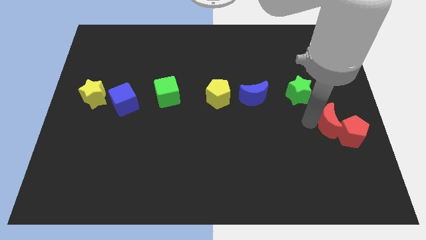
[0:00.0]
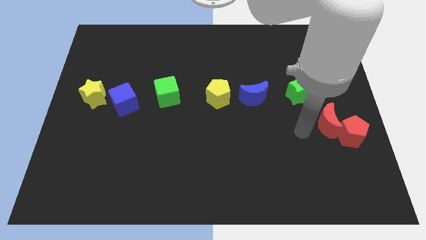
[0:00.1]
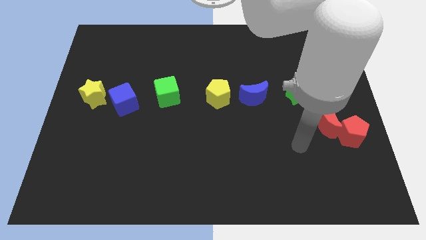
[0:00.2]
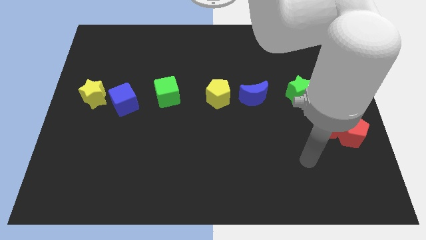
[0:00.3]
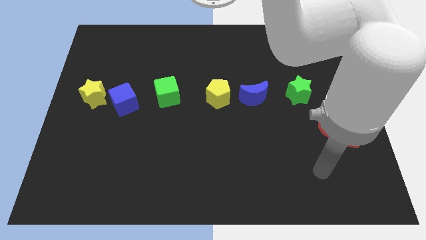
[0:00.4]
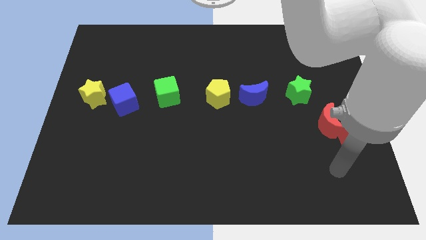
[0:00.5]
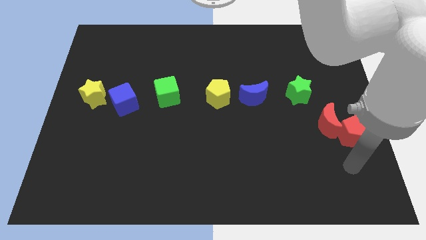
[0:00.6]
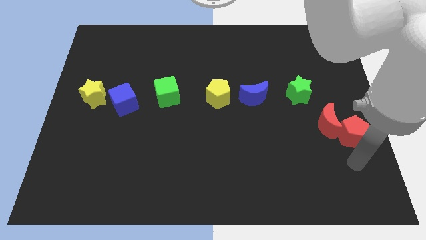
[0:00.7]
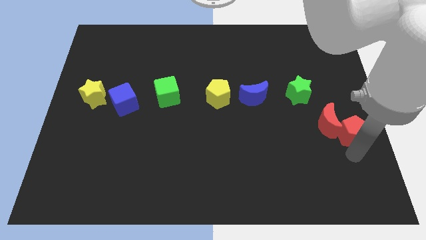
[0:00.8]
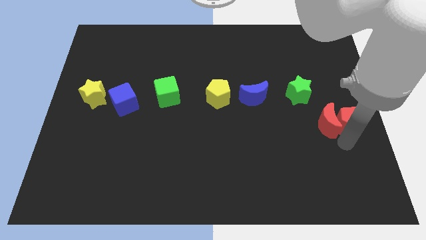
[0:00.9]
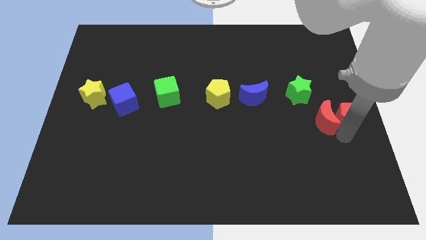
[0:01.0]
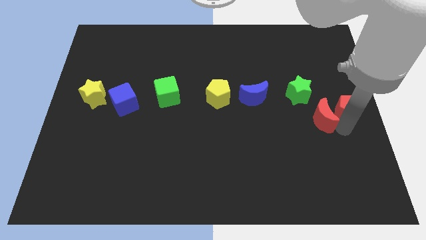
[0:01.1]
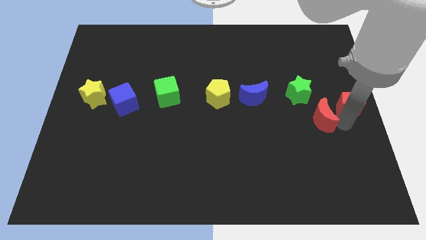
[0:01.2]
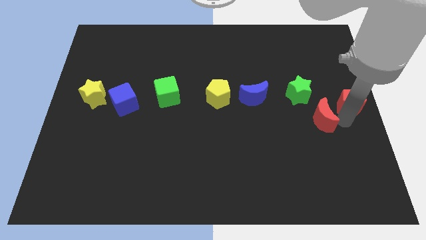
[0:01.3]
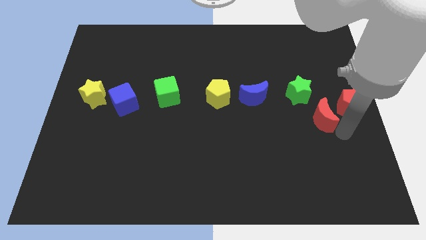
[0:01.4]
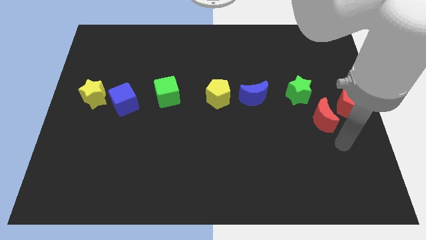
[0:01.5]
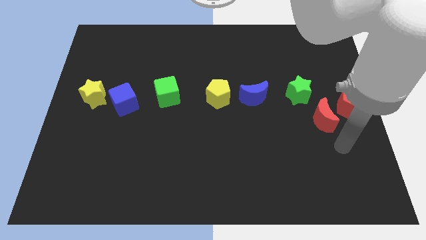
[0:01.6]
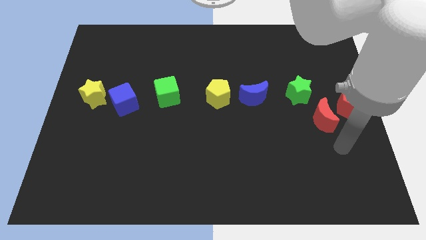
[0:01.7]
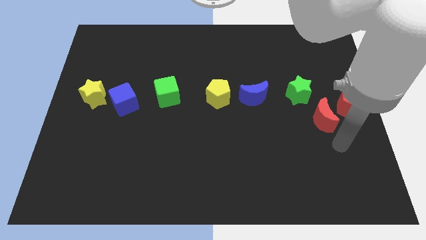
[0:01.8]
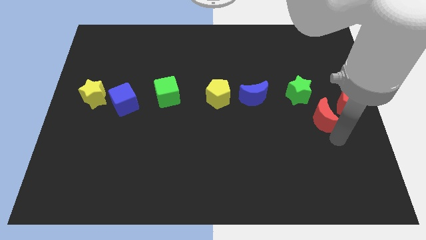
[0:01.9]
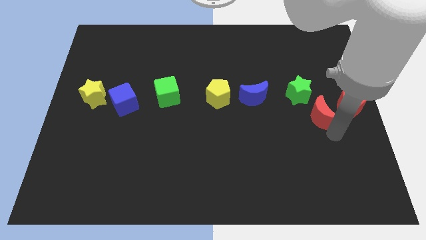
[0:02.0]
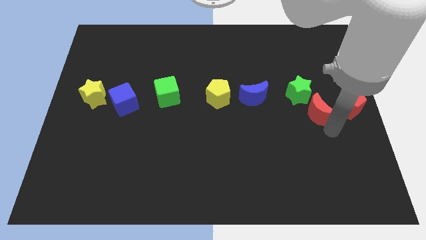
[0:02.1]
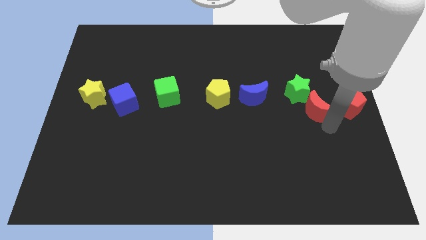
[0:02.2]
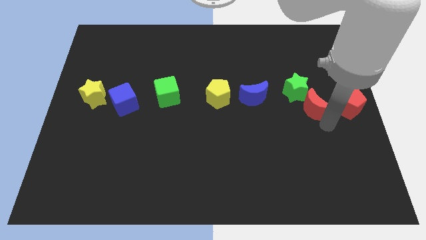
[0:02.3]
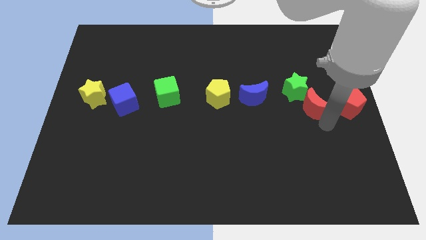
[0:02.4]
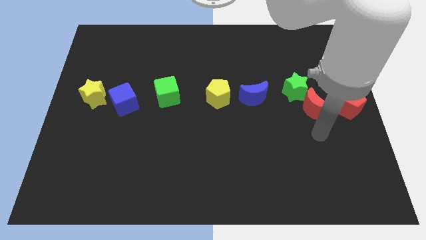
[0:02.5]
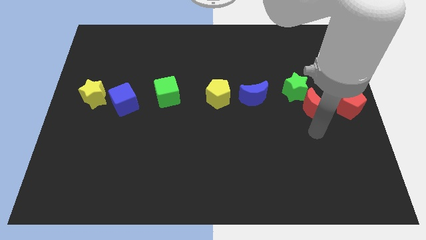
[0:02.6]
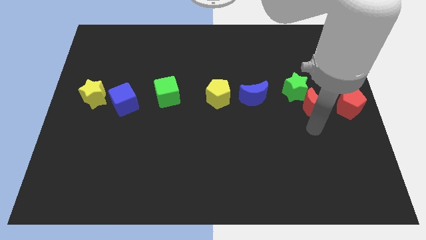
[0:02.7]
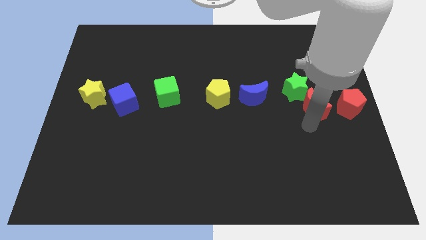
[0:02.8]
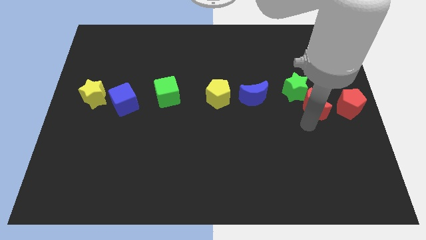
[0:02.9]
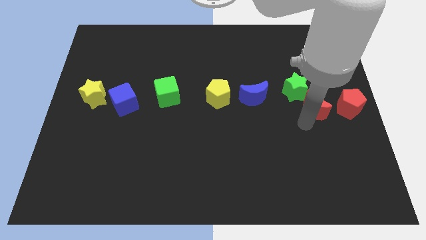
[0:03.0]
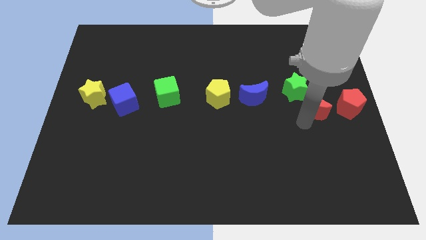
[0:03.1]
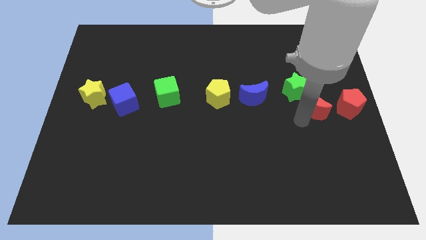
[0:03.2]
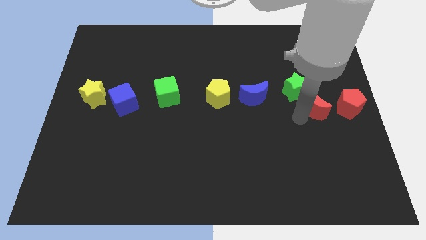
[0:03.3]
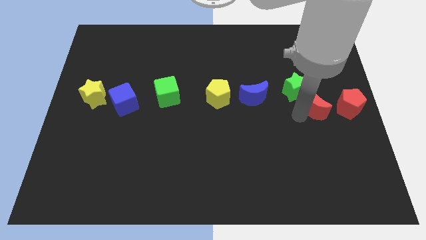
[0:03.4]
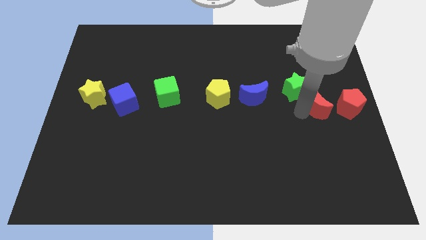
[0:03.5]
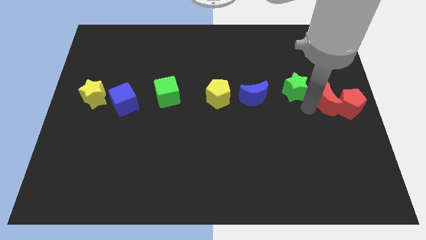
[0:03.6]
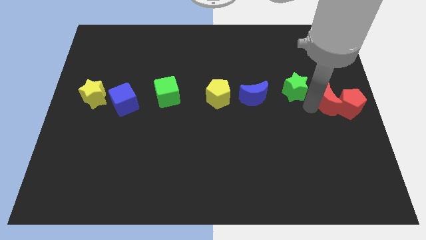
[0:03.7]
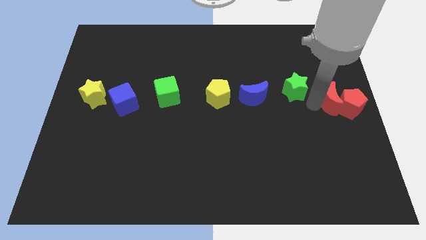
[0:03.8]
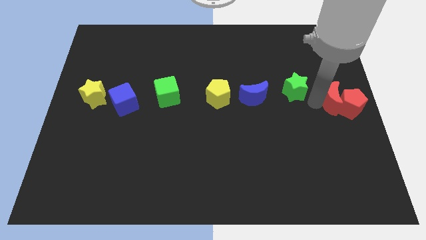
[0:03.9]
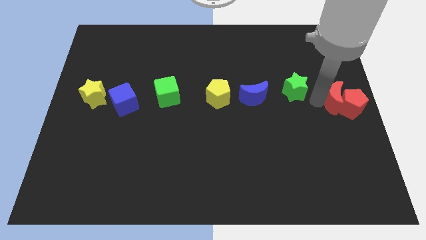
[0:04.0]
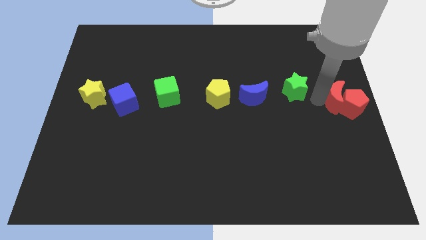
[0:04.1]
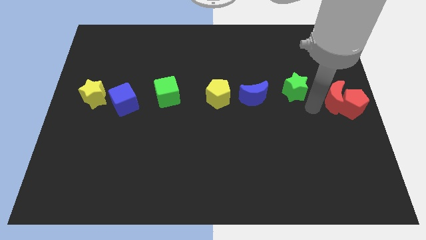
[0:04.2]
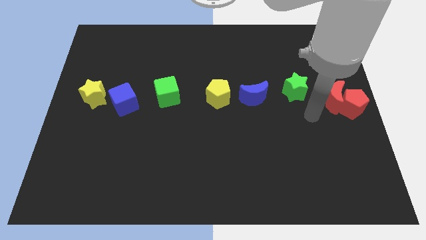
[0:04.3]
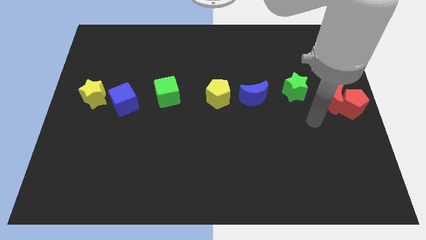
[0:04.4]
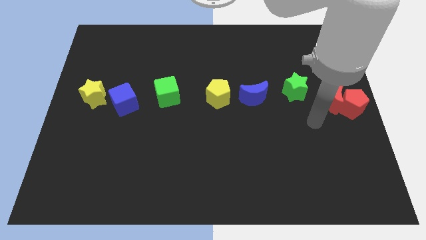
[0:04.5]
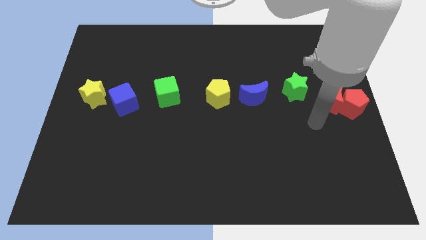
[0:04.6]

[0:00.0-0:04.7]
put the red blocks at the center right side of the board

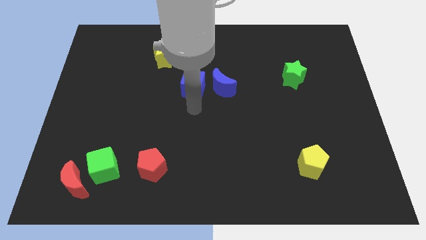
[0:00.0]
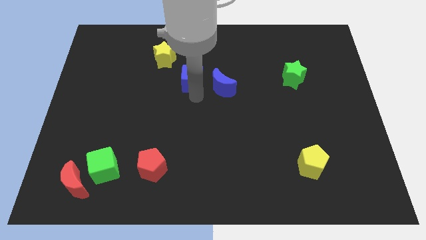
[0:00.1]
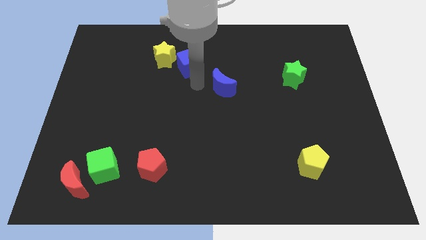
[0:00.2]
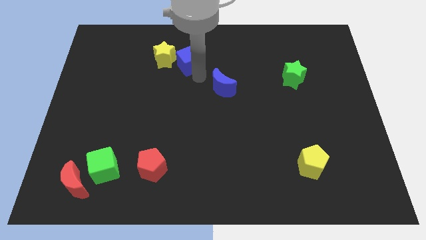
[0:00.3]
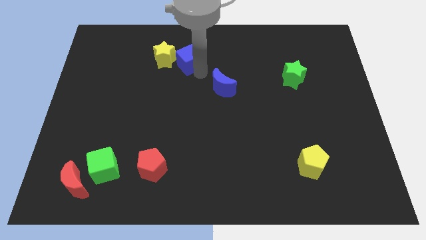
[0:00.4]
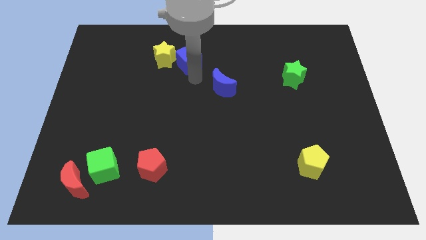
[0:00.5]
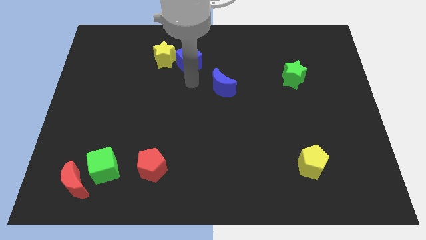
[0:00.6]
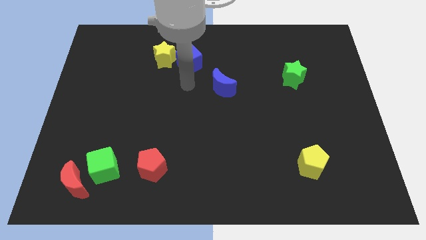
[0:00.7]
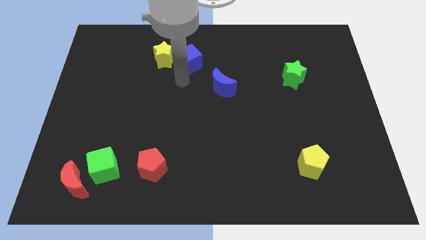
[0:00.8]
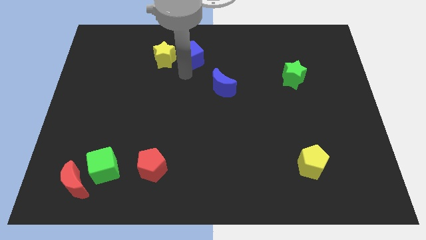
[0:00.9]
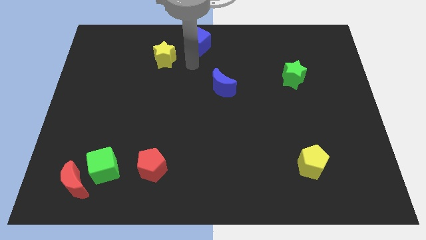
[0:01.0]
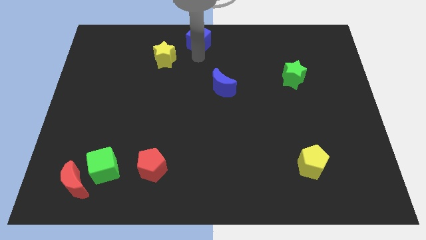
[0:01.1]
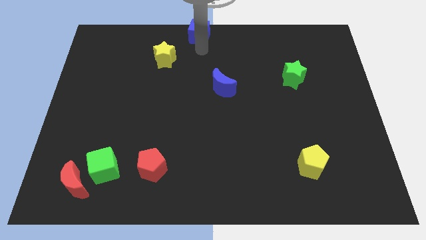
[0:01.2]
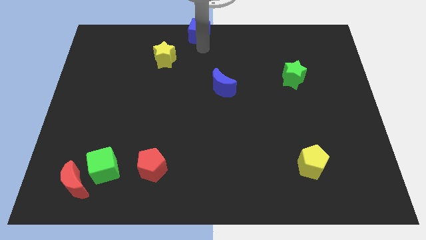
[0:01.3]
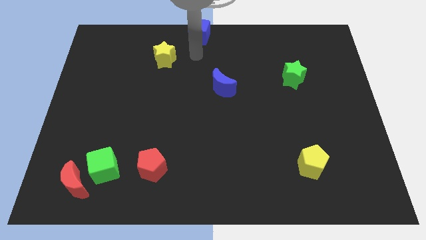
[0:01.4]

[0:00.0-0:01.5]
move the blue cube to the top center

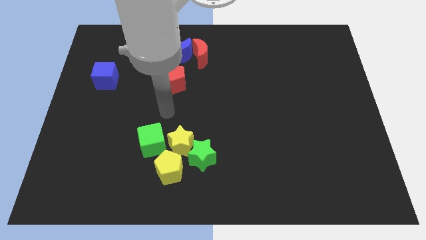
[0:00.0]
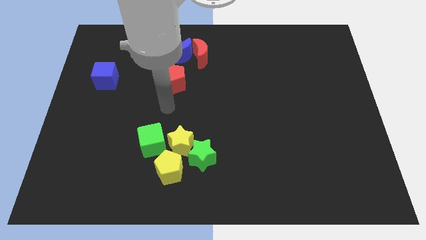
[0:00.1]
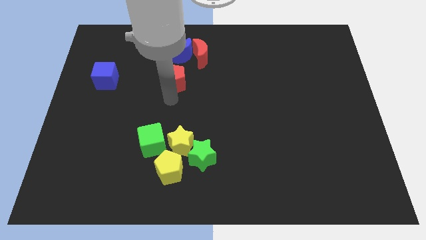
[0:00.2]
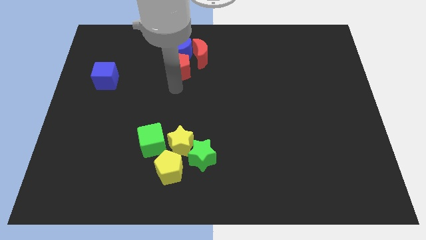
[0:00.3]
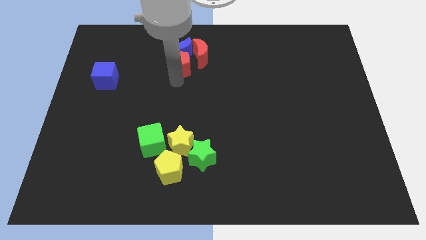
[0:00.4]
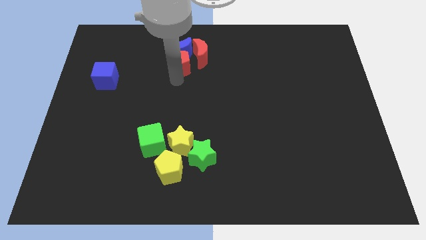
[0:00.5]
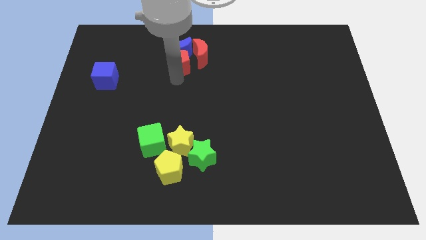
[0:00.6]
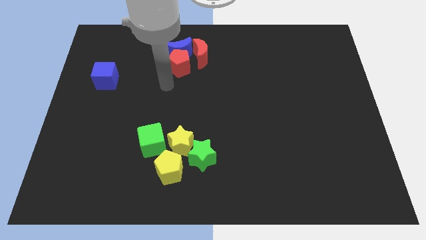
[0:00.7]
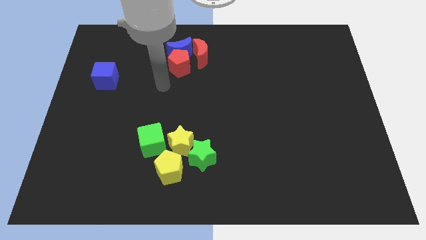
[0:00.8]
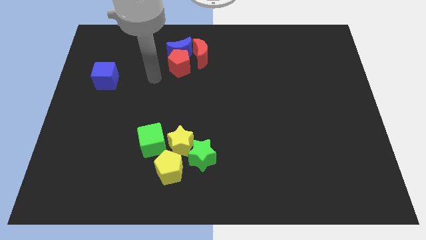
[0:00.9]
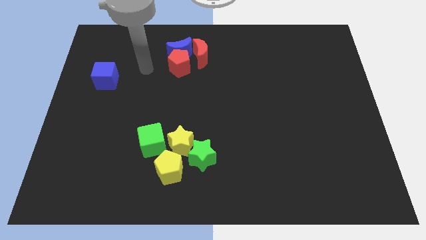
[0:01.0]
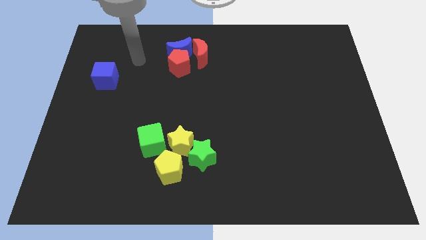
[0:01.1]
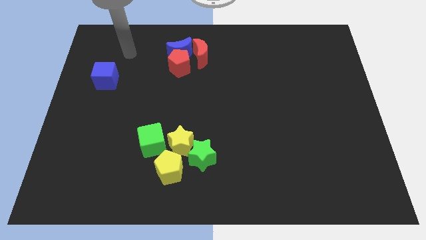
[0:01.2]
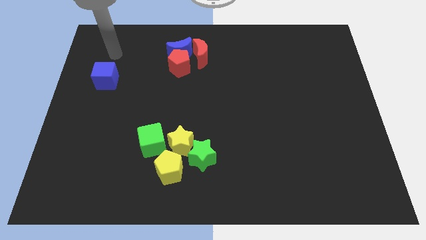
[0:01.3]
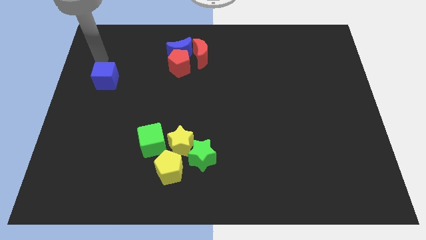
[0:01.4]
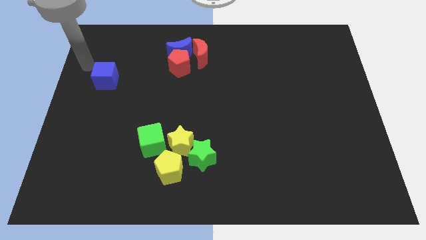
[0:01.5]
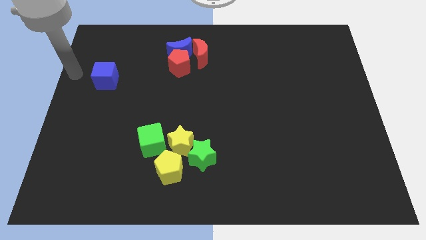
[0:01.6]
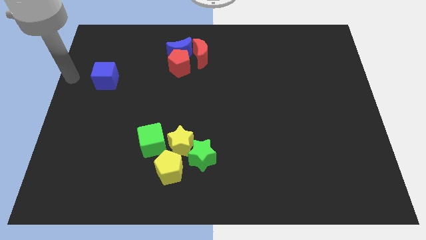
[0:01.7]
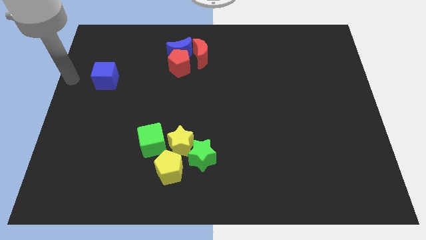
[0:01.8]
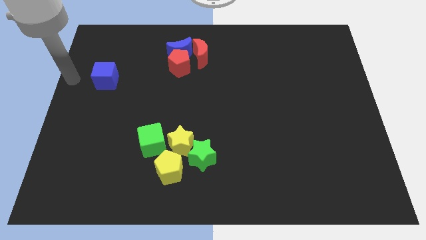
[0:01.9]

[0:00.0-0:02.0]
move your arm towards the blue cube

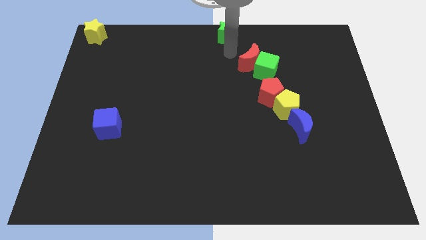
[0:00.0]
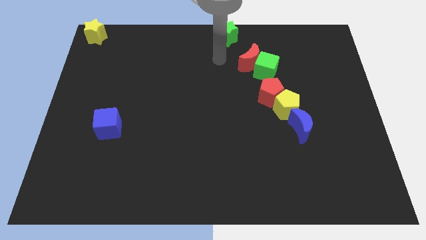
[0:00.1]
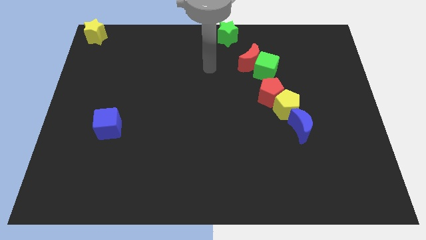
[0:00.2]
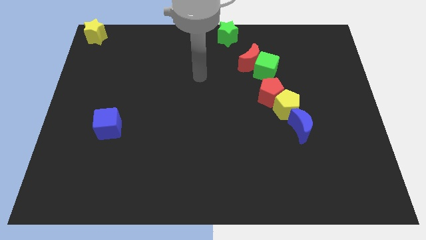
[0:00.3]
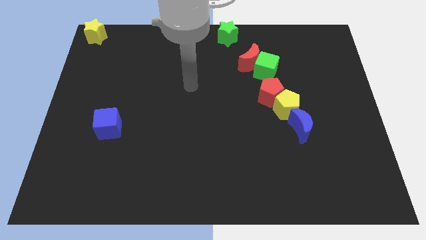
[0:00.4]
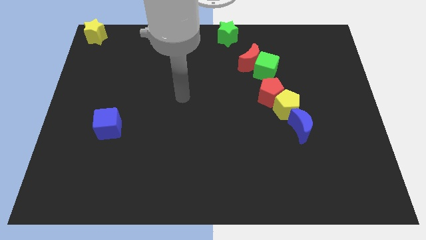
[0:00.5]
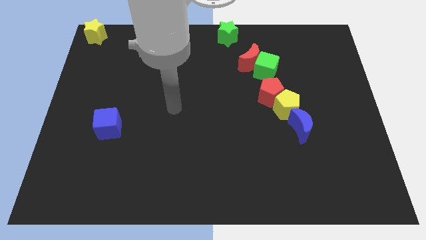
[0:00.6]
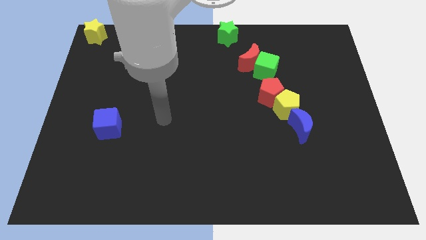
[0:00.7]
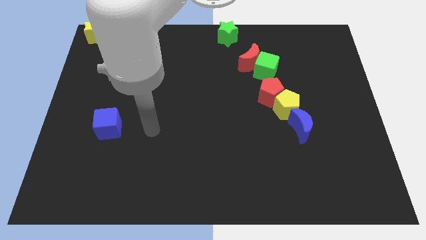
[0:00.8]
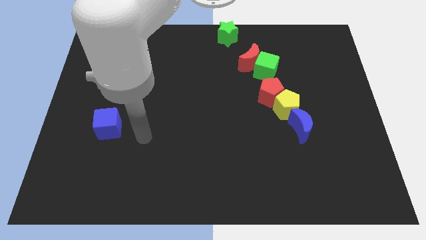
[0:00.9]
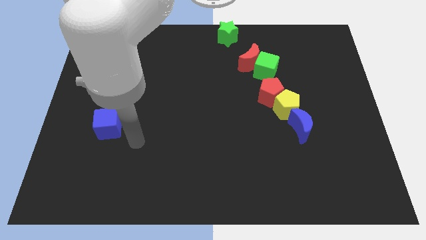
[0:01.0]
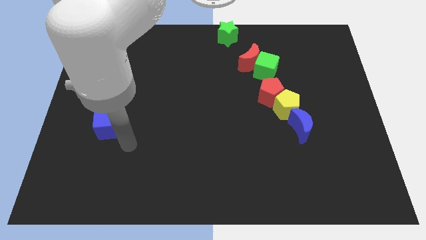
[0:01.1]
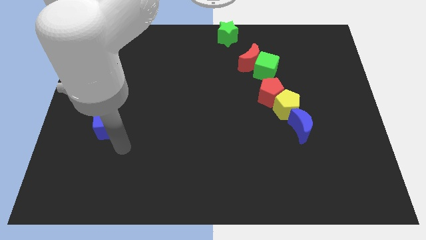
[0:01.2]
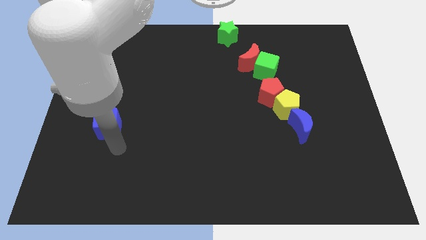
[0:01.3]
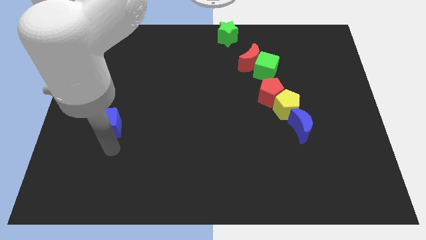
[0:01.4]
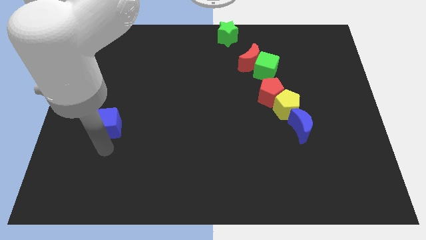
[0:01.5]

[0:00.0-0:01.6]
point your hand at the bottom side of the blue cube
